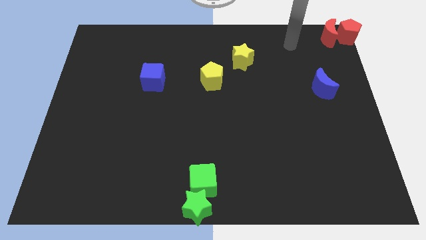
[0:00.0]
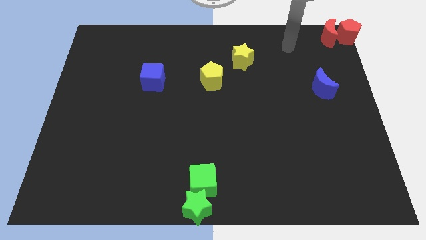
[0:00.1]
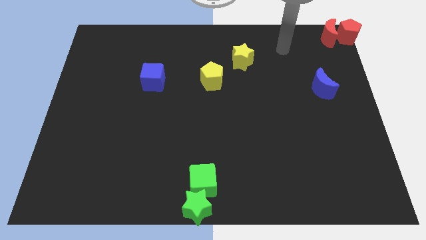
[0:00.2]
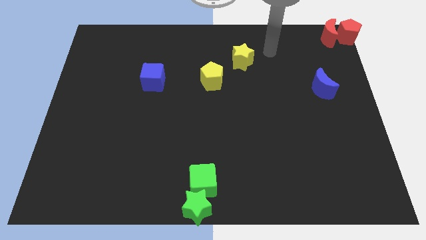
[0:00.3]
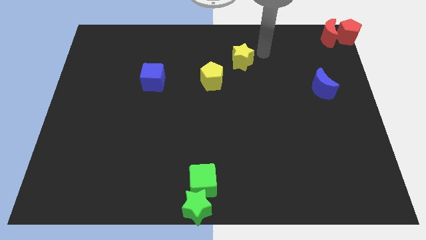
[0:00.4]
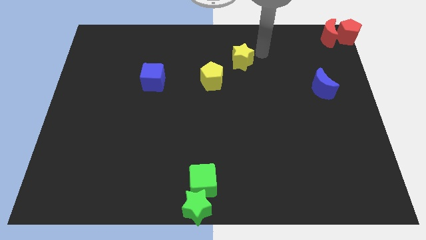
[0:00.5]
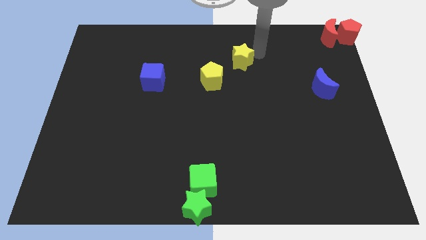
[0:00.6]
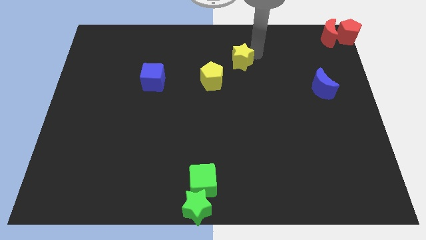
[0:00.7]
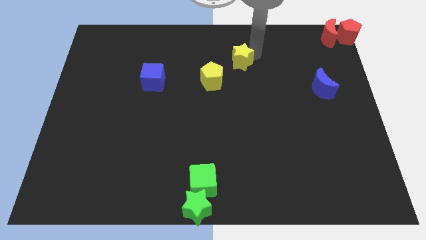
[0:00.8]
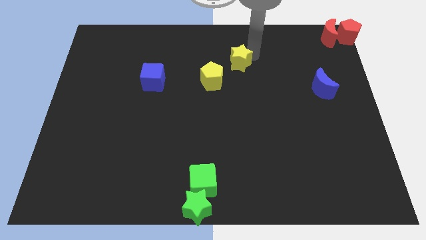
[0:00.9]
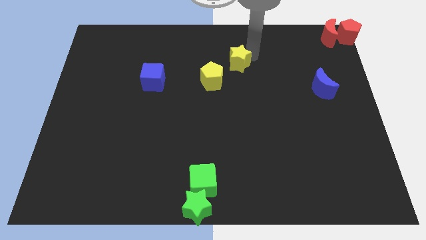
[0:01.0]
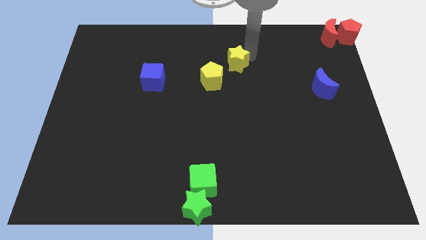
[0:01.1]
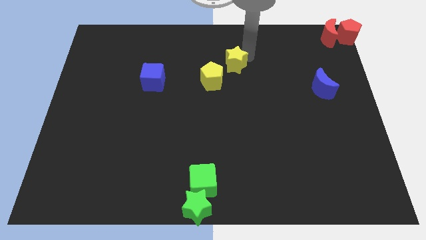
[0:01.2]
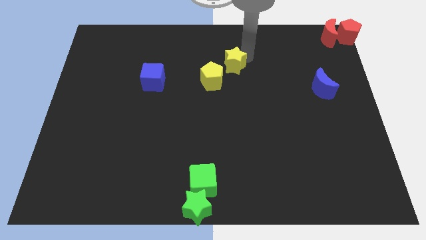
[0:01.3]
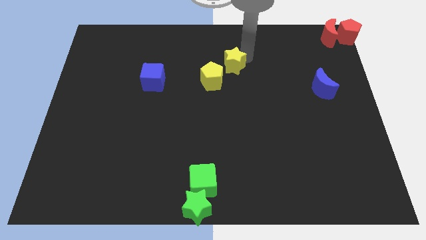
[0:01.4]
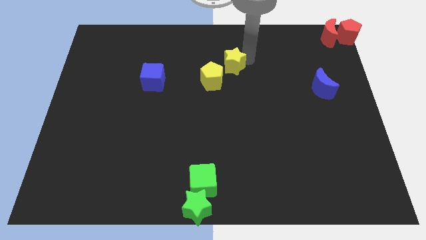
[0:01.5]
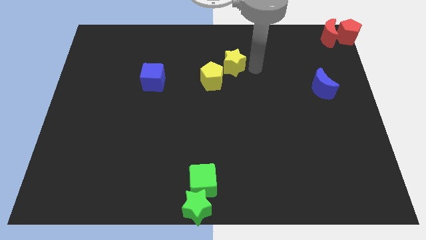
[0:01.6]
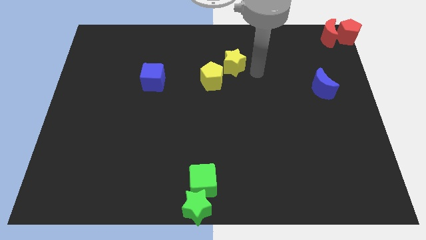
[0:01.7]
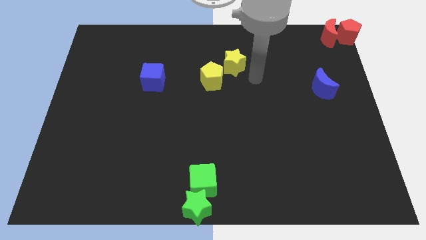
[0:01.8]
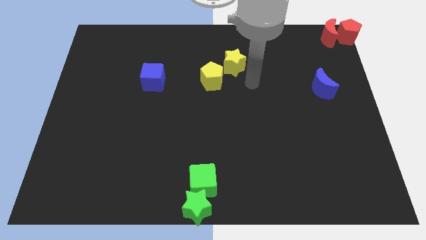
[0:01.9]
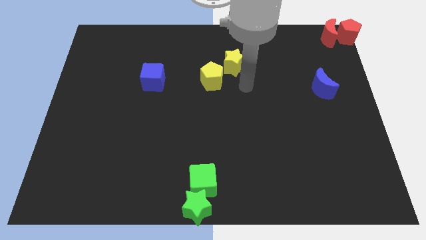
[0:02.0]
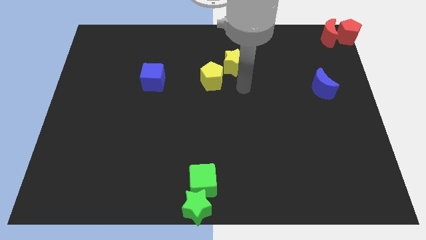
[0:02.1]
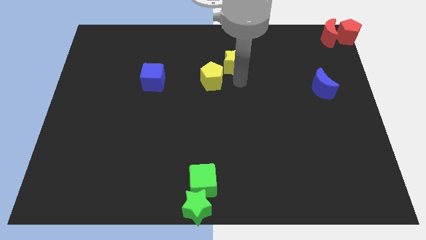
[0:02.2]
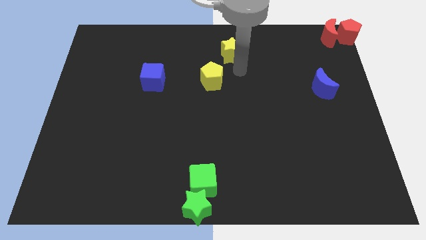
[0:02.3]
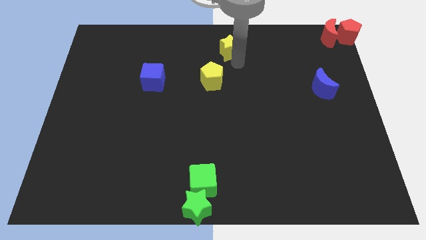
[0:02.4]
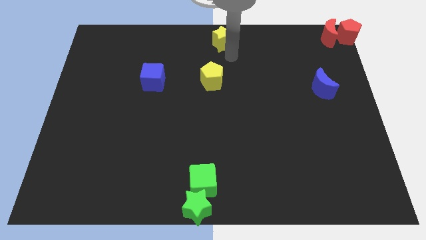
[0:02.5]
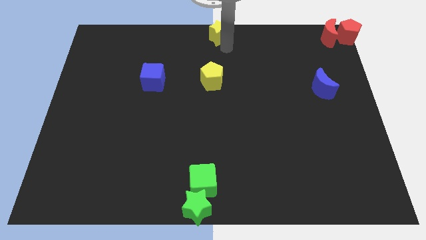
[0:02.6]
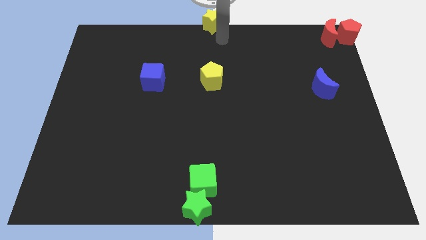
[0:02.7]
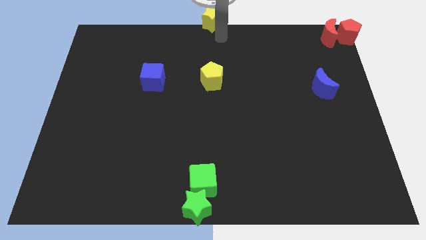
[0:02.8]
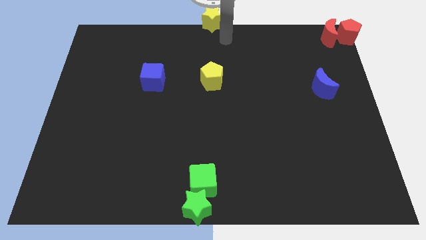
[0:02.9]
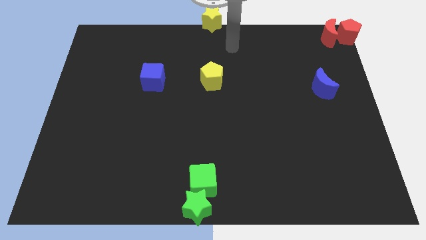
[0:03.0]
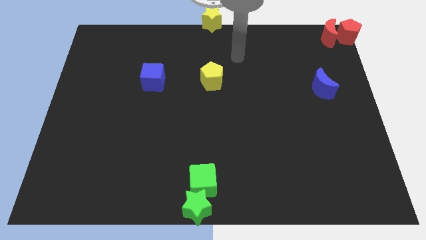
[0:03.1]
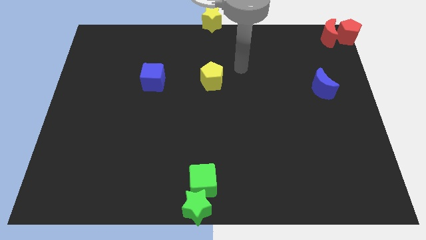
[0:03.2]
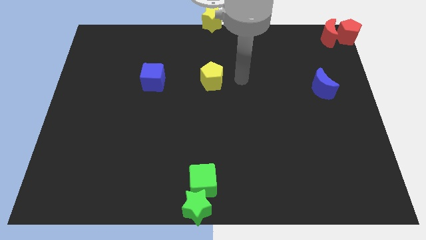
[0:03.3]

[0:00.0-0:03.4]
put the yellow star vertically above the yellow pentagon

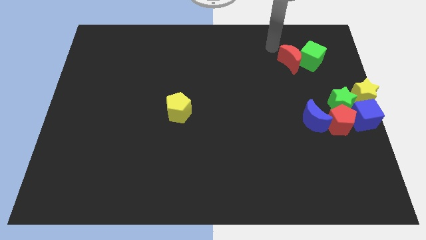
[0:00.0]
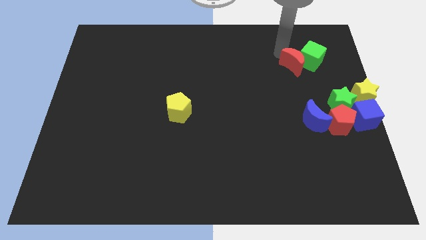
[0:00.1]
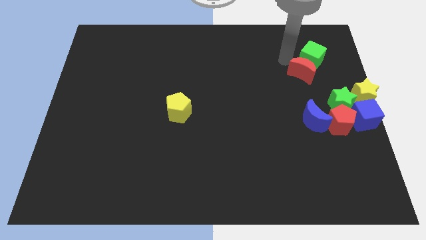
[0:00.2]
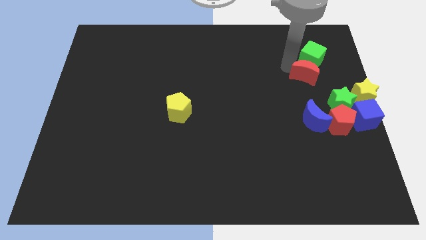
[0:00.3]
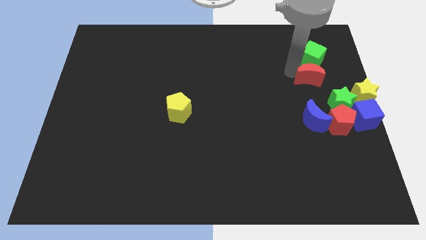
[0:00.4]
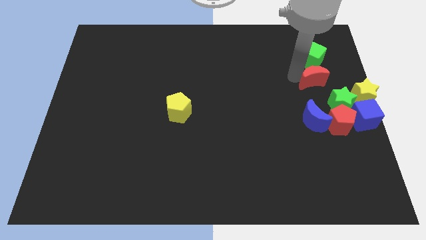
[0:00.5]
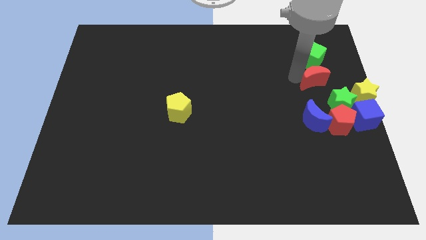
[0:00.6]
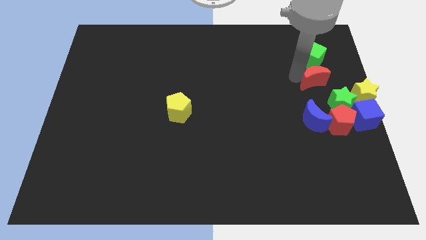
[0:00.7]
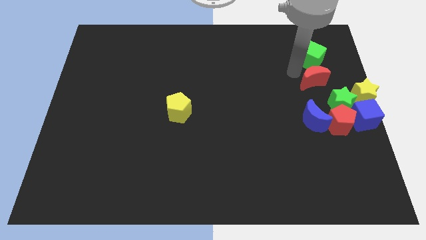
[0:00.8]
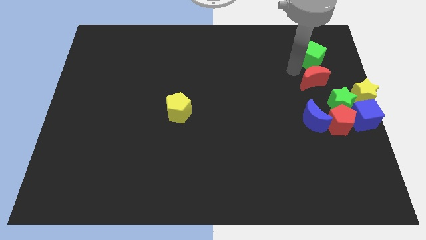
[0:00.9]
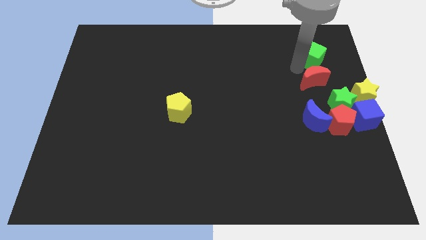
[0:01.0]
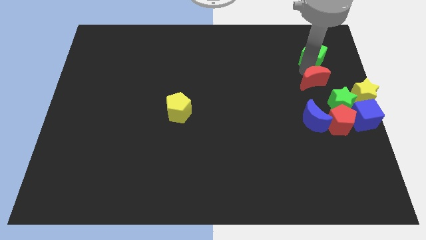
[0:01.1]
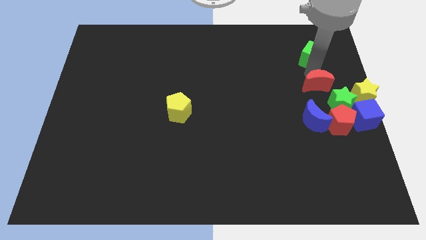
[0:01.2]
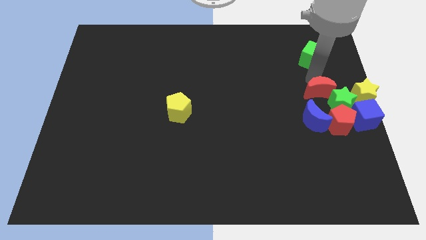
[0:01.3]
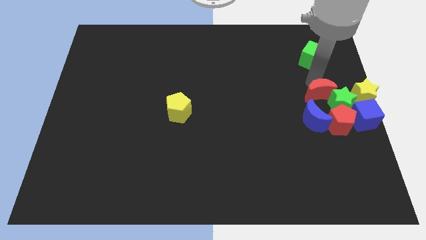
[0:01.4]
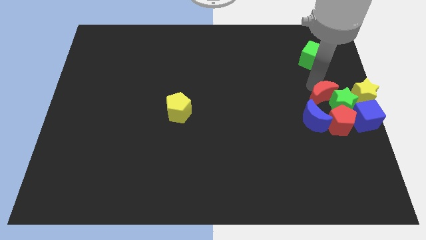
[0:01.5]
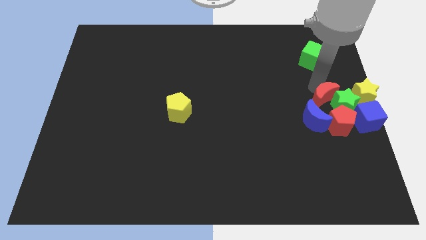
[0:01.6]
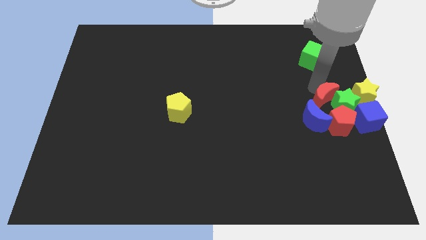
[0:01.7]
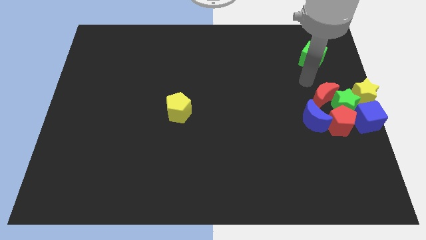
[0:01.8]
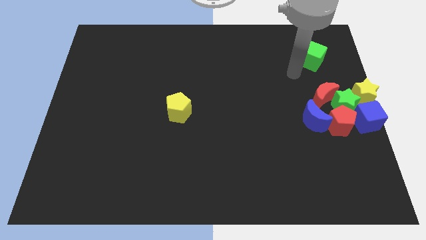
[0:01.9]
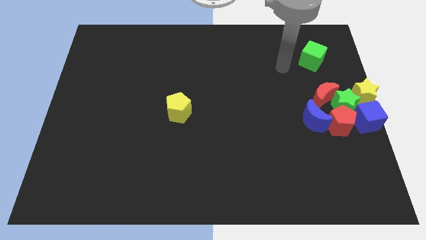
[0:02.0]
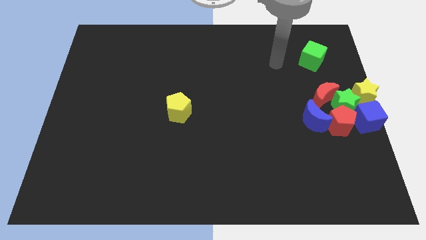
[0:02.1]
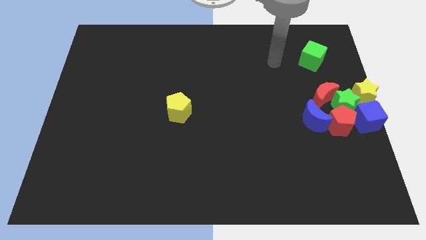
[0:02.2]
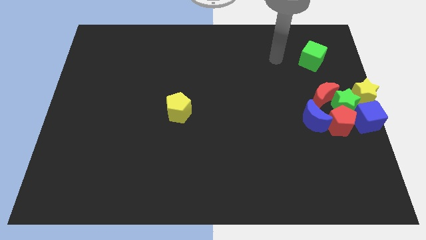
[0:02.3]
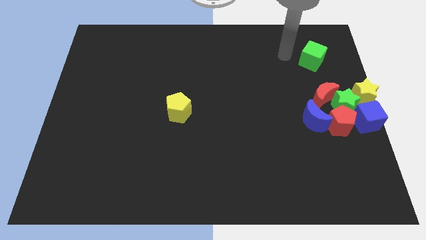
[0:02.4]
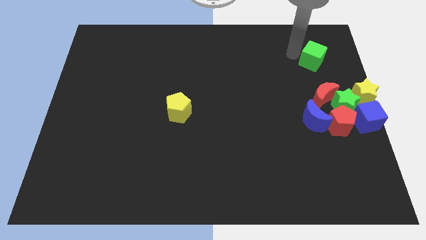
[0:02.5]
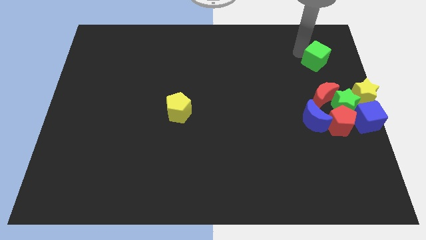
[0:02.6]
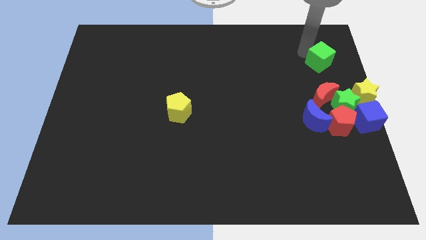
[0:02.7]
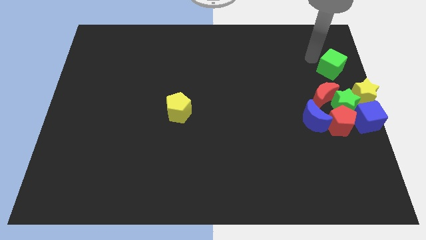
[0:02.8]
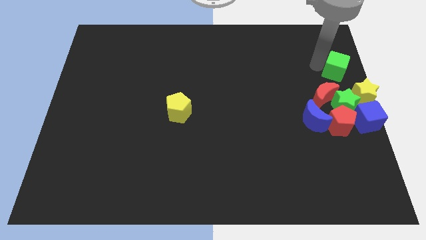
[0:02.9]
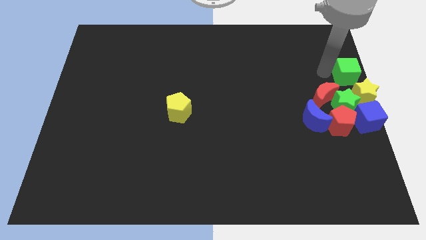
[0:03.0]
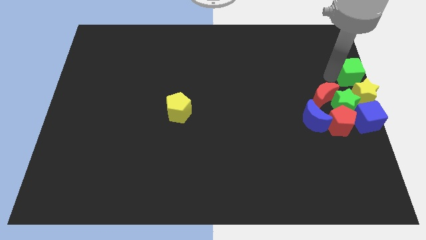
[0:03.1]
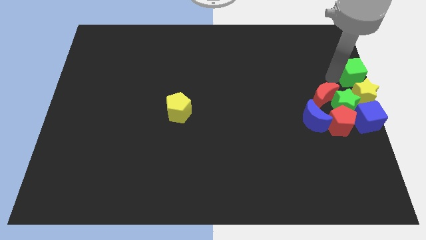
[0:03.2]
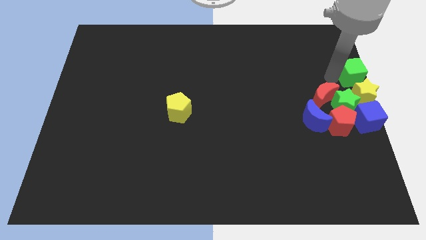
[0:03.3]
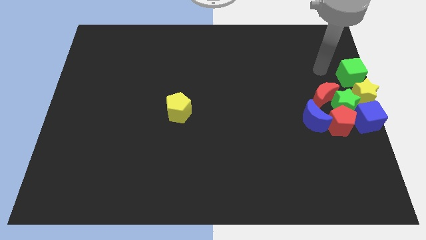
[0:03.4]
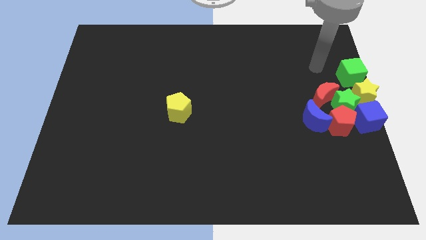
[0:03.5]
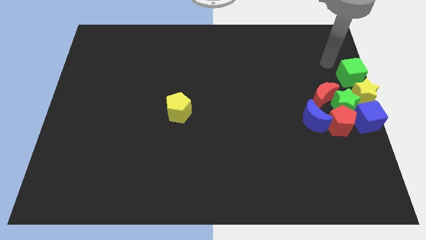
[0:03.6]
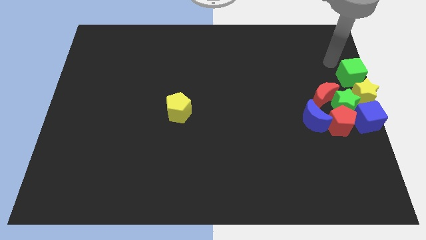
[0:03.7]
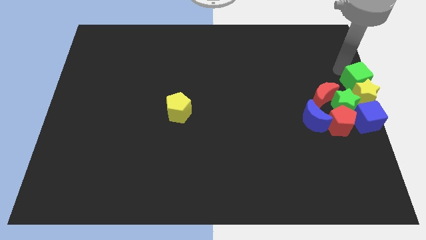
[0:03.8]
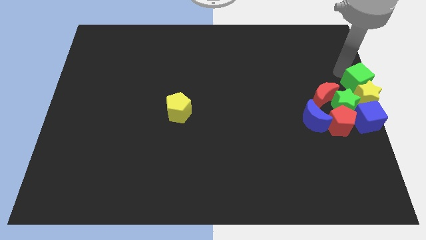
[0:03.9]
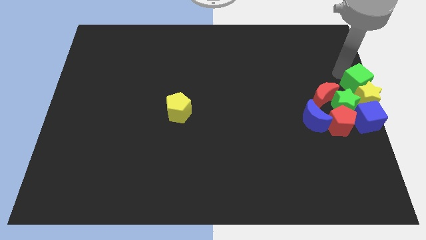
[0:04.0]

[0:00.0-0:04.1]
push red moon and green cube in to group of blocks

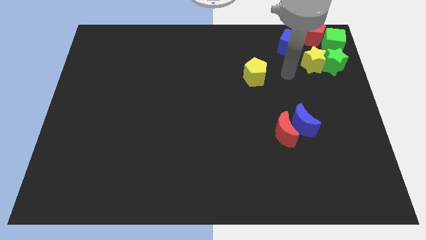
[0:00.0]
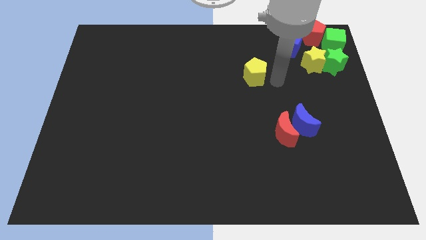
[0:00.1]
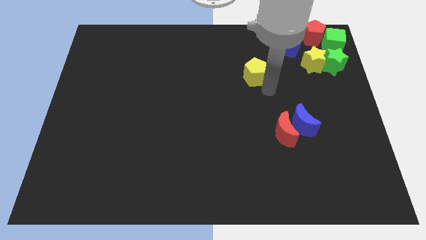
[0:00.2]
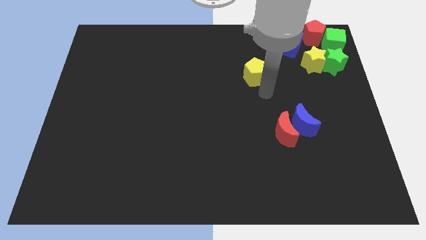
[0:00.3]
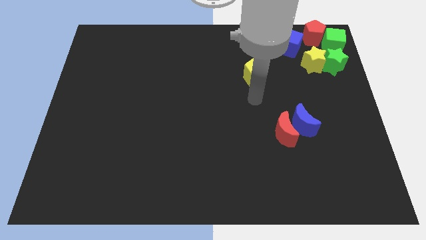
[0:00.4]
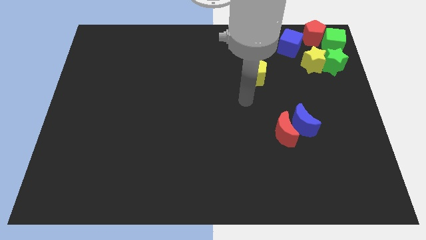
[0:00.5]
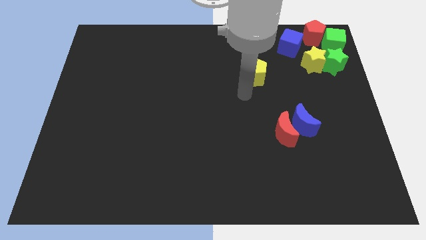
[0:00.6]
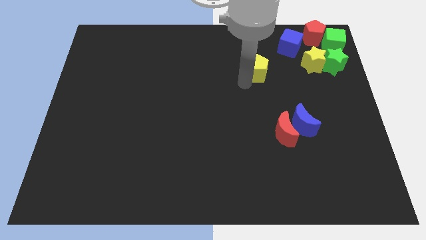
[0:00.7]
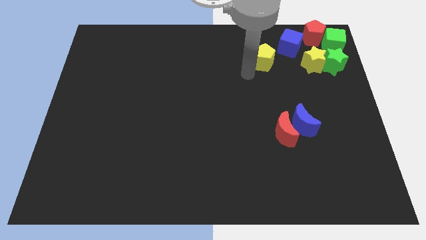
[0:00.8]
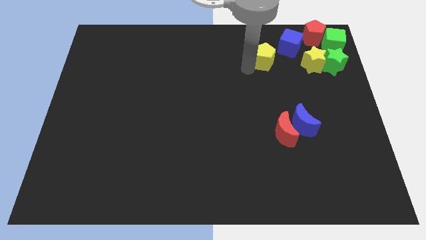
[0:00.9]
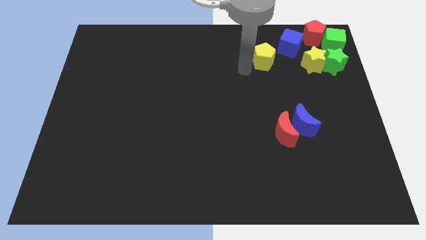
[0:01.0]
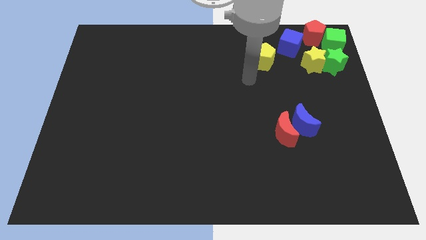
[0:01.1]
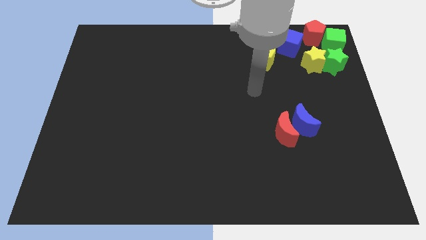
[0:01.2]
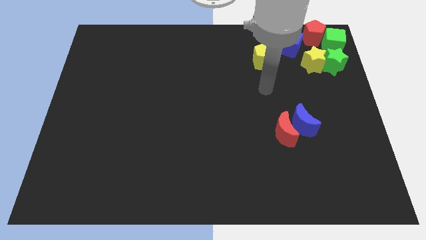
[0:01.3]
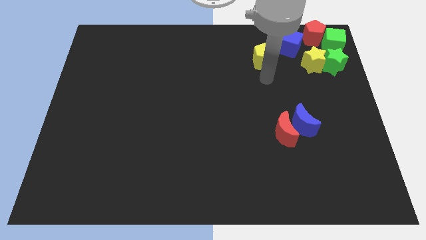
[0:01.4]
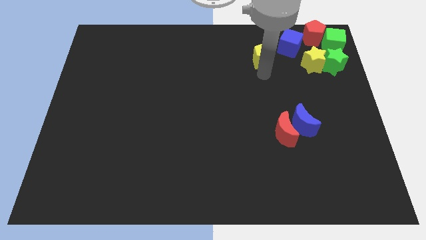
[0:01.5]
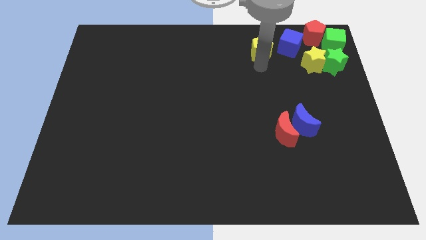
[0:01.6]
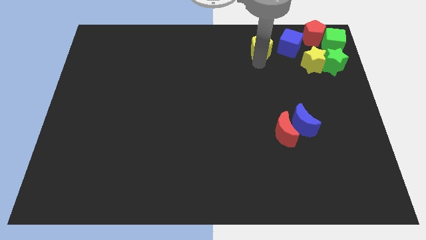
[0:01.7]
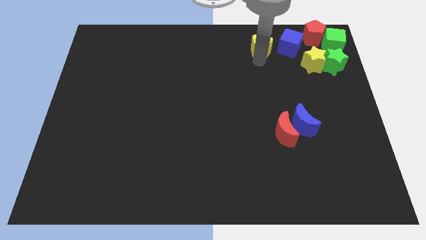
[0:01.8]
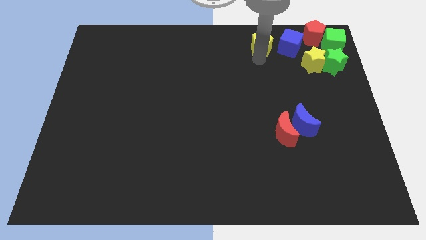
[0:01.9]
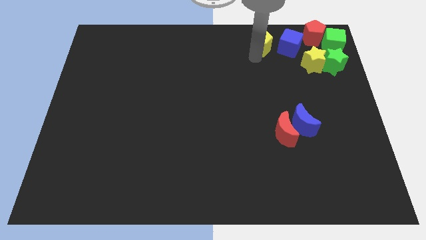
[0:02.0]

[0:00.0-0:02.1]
move yellow pentagon to the left of blue cube
